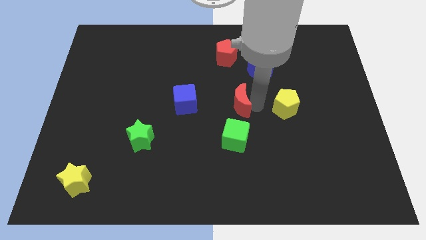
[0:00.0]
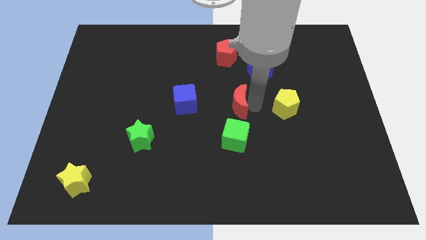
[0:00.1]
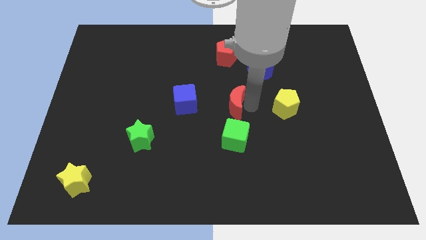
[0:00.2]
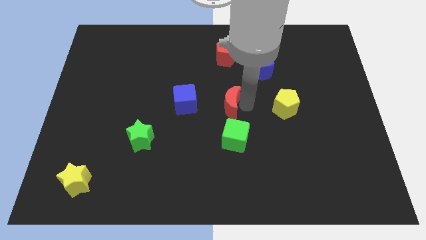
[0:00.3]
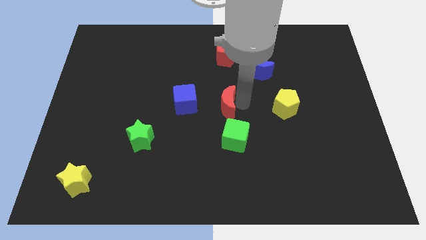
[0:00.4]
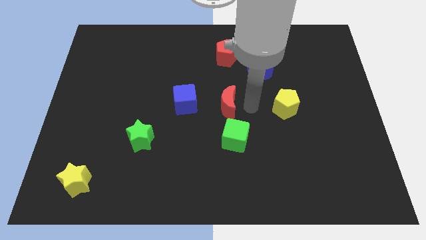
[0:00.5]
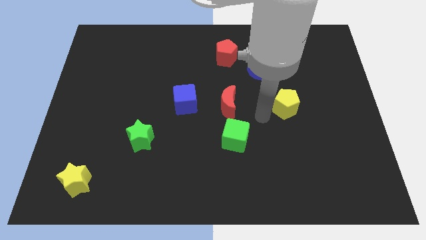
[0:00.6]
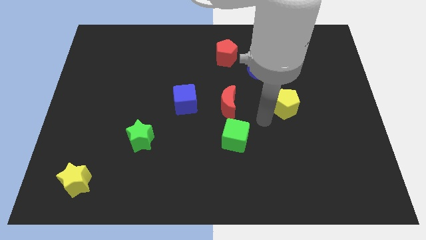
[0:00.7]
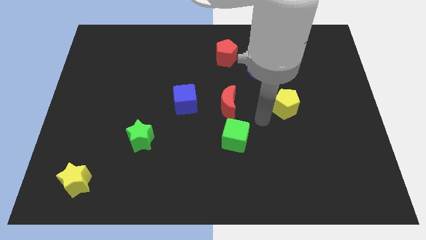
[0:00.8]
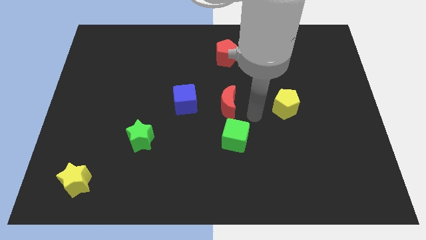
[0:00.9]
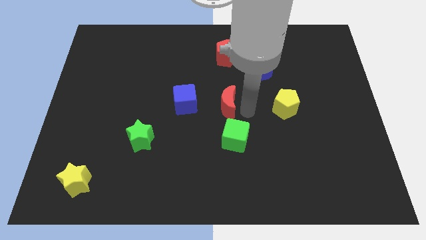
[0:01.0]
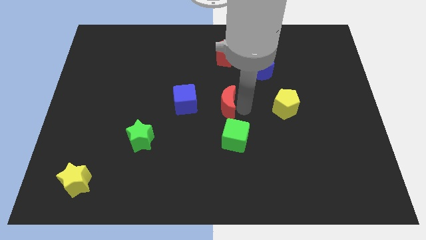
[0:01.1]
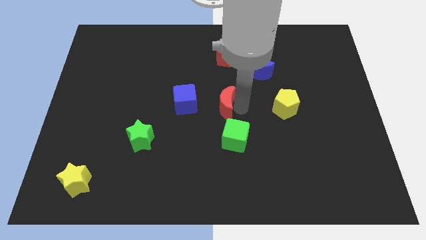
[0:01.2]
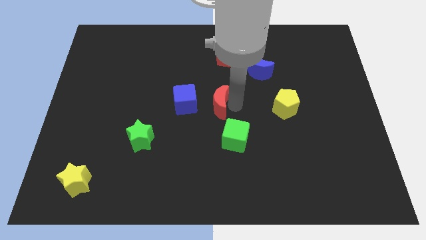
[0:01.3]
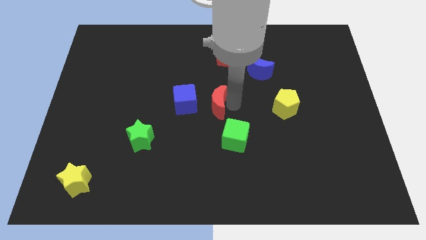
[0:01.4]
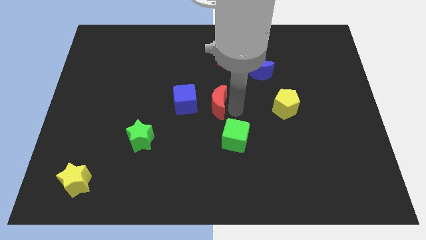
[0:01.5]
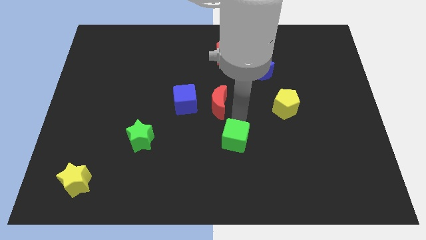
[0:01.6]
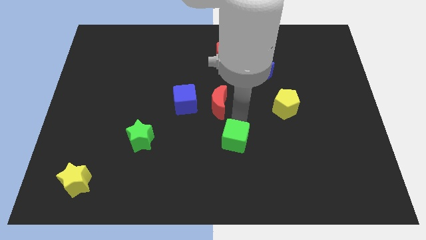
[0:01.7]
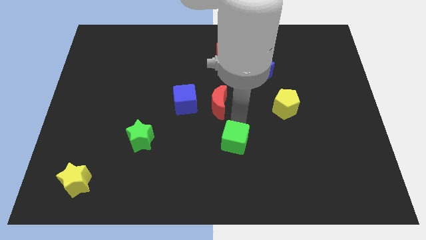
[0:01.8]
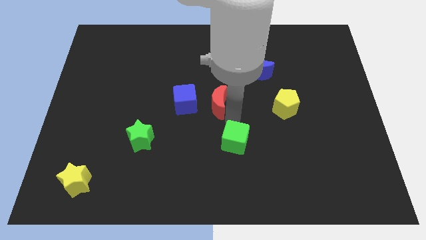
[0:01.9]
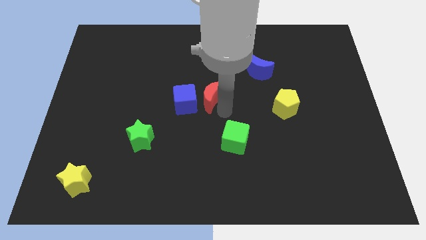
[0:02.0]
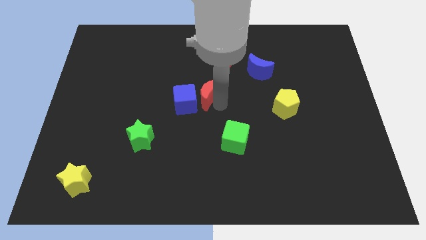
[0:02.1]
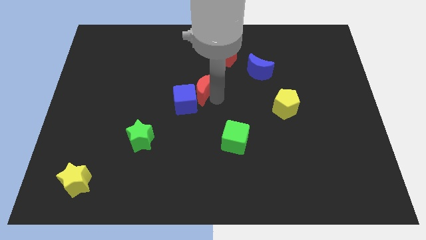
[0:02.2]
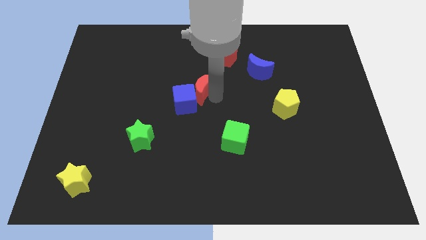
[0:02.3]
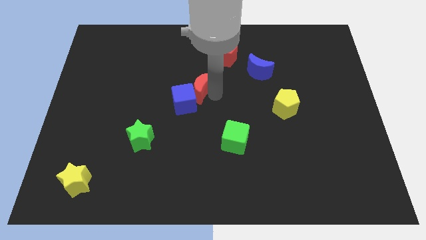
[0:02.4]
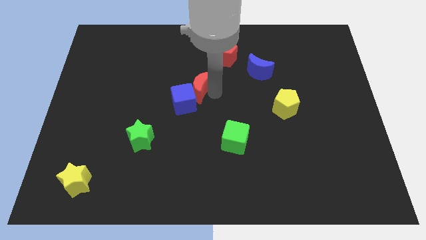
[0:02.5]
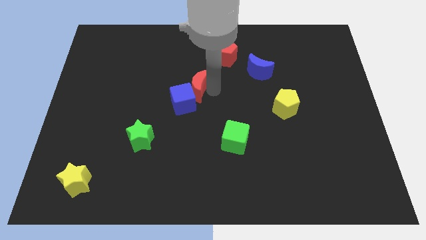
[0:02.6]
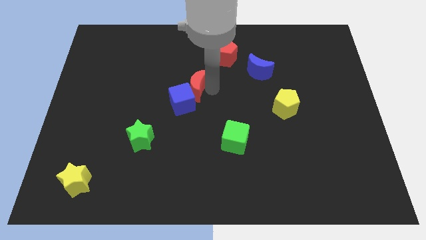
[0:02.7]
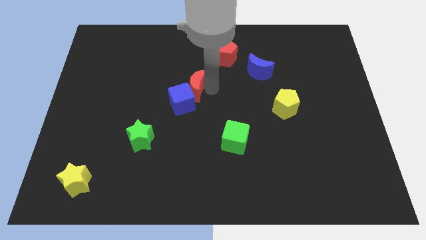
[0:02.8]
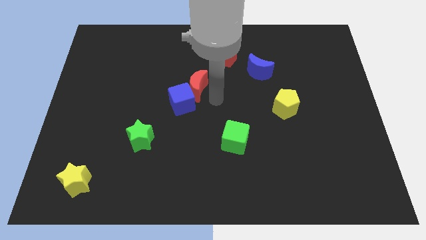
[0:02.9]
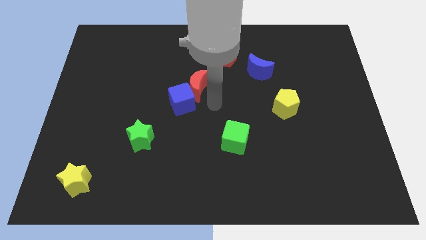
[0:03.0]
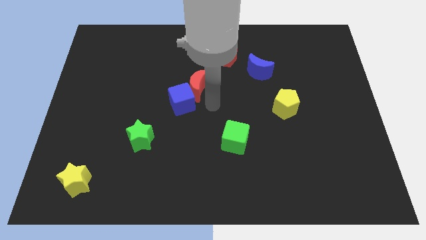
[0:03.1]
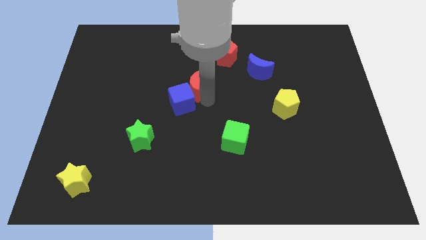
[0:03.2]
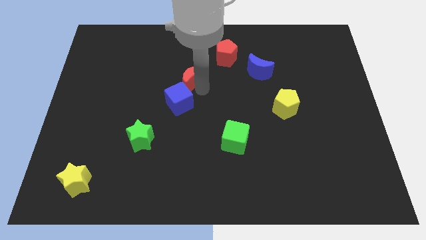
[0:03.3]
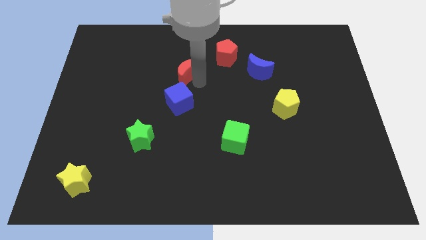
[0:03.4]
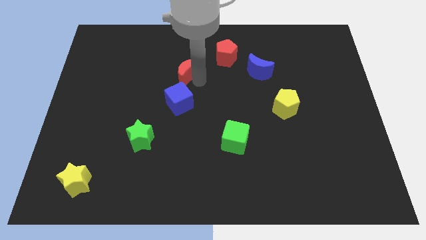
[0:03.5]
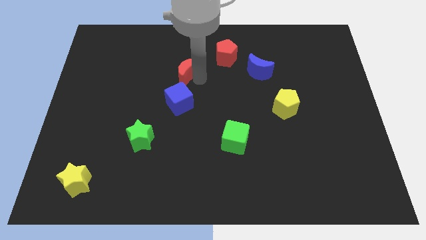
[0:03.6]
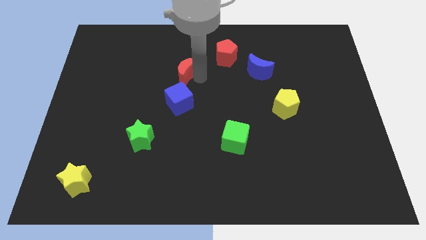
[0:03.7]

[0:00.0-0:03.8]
move the red crescent to the top of the blue cube

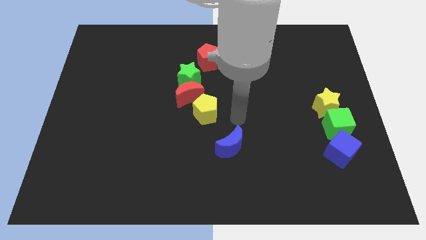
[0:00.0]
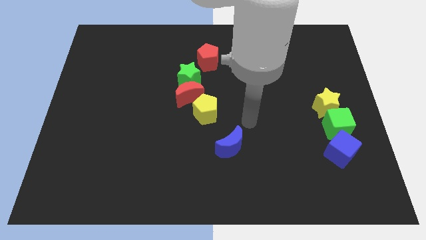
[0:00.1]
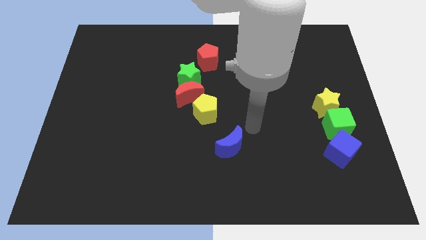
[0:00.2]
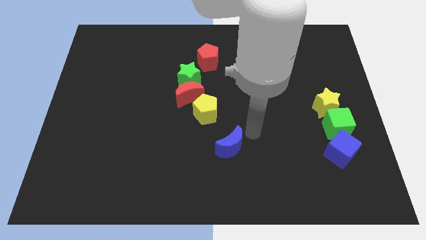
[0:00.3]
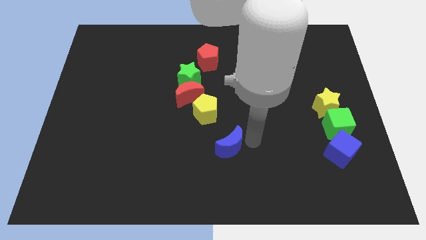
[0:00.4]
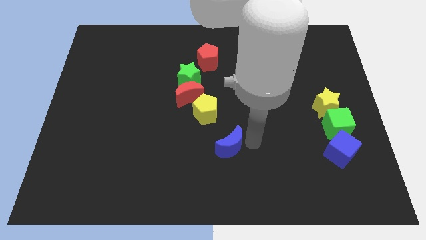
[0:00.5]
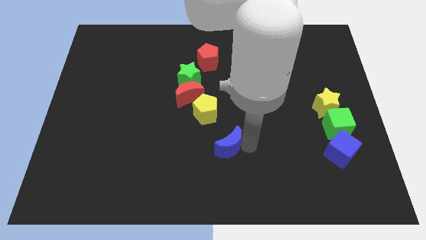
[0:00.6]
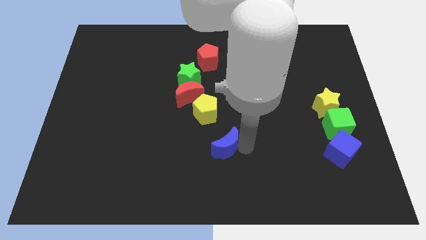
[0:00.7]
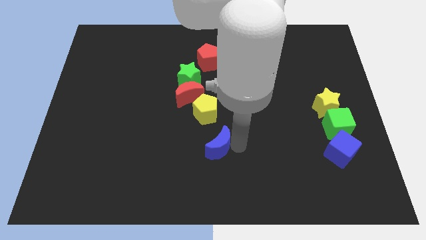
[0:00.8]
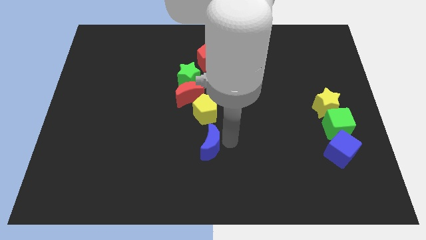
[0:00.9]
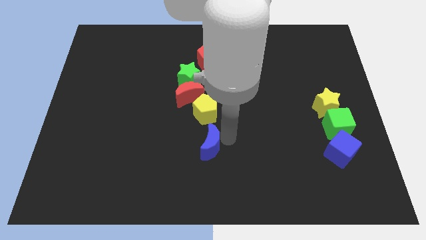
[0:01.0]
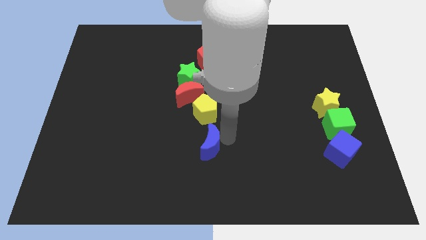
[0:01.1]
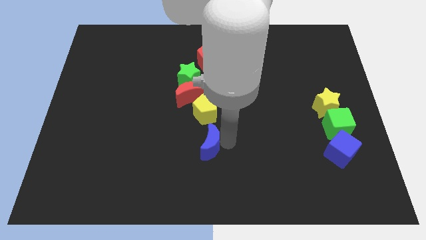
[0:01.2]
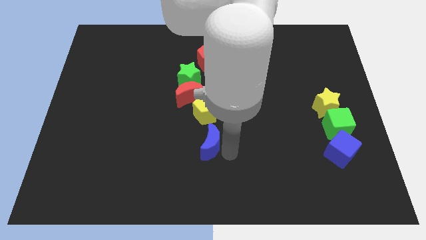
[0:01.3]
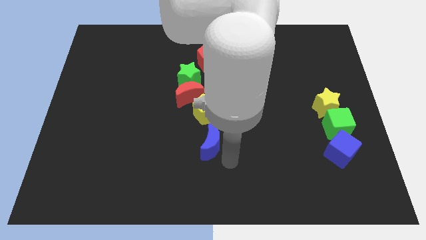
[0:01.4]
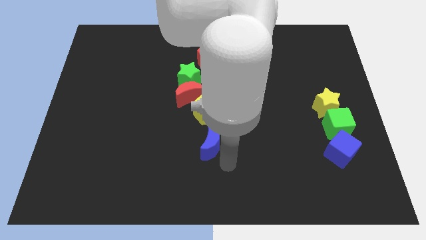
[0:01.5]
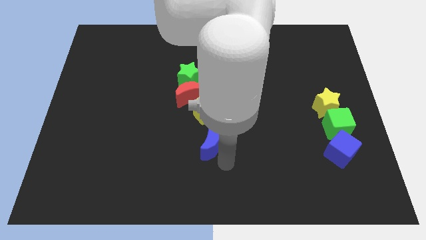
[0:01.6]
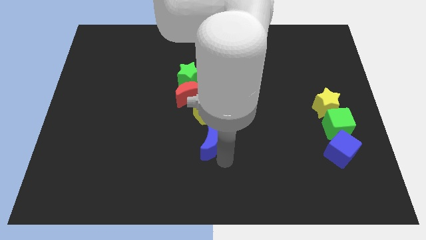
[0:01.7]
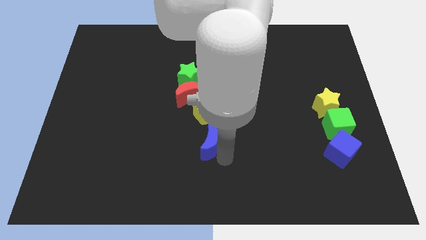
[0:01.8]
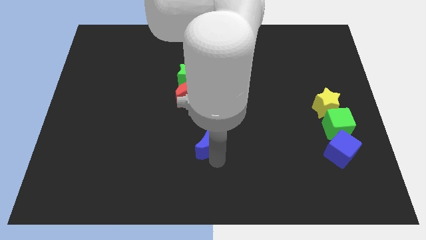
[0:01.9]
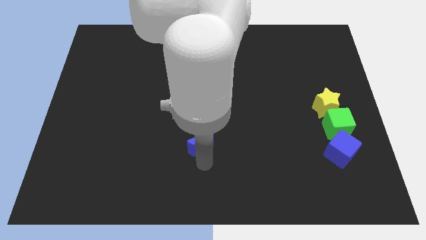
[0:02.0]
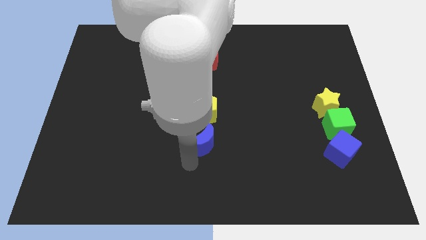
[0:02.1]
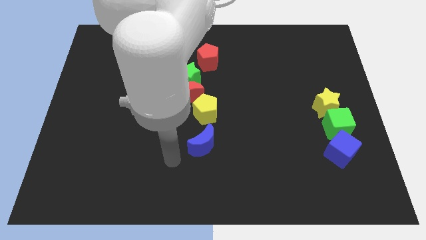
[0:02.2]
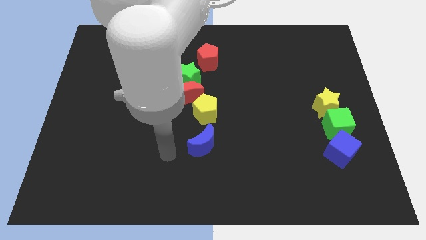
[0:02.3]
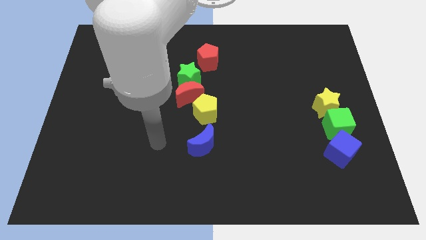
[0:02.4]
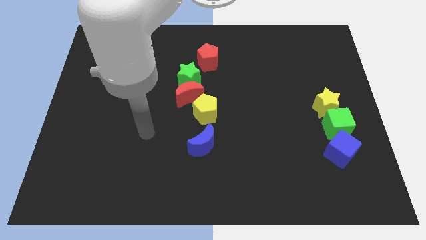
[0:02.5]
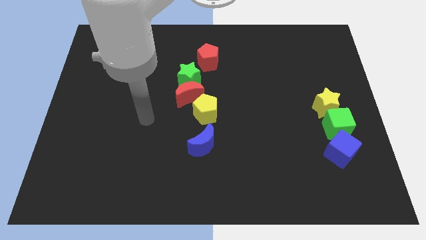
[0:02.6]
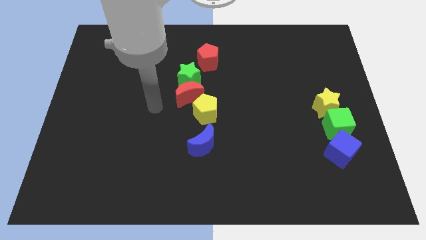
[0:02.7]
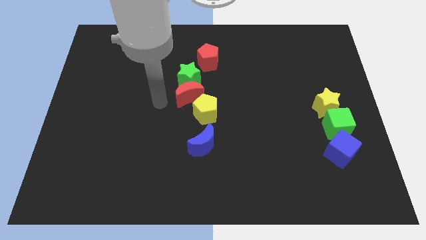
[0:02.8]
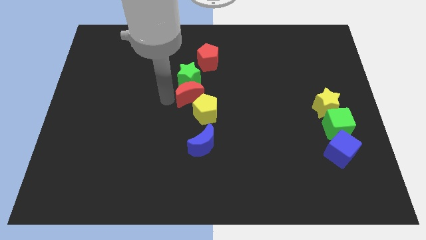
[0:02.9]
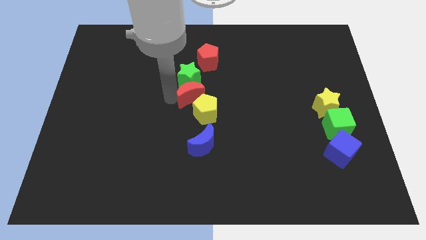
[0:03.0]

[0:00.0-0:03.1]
move the blue semicircle below the yellow pentagon

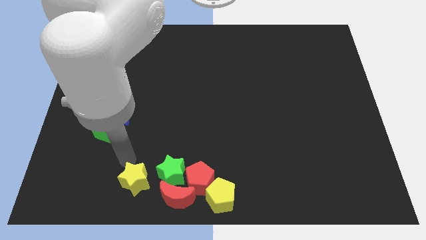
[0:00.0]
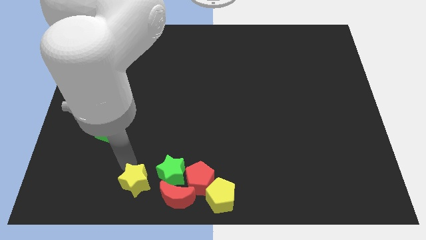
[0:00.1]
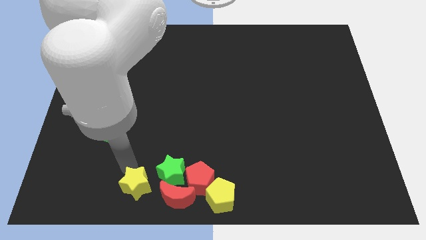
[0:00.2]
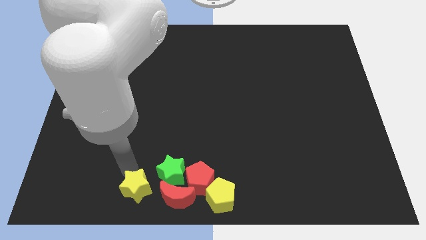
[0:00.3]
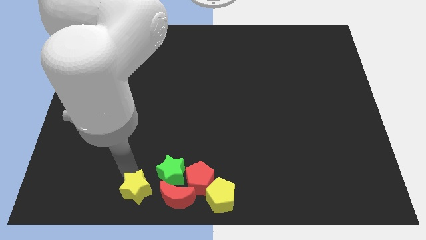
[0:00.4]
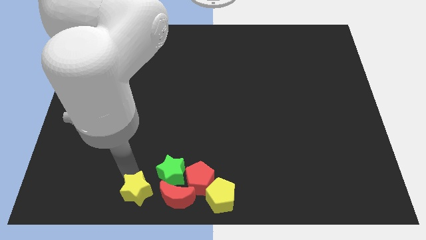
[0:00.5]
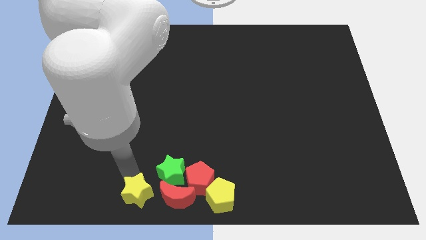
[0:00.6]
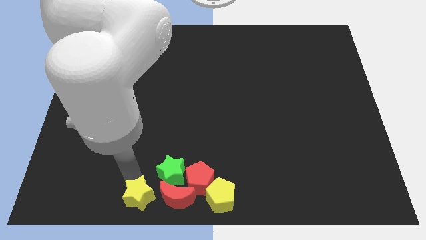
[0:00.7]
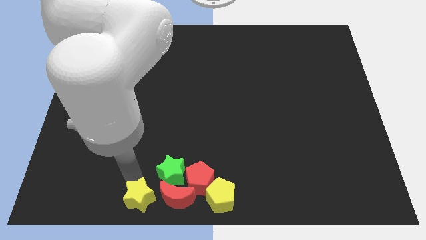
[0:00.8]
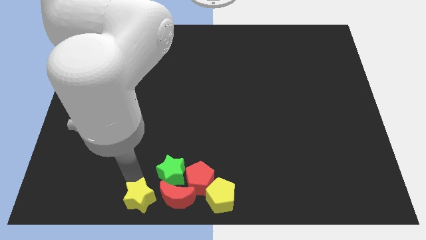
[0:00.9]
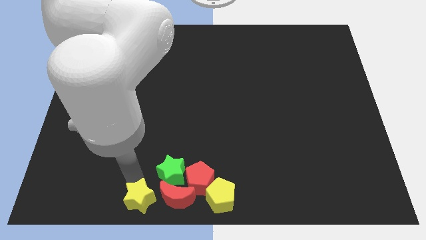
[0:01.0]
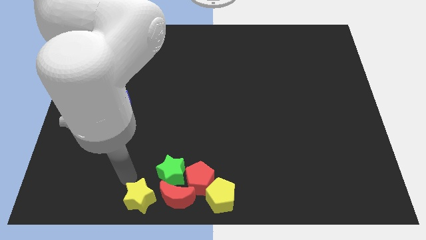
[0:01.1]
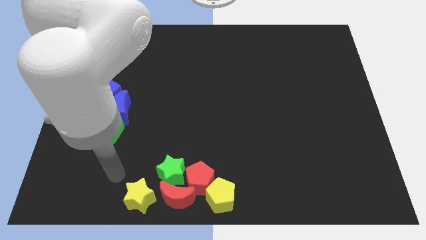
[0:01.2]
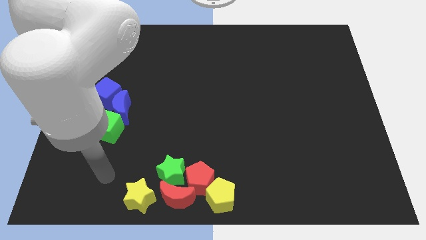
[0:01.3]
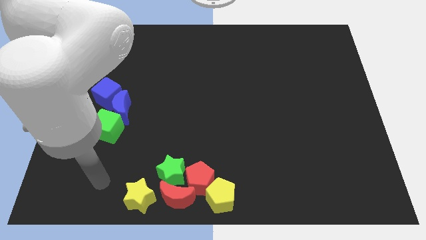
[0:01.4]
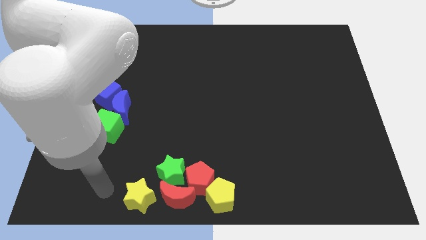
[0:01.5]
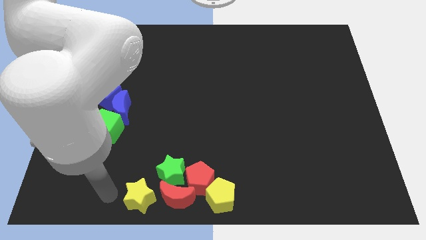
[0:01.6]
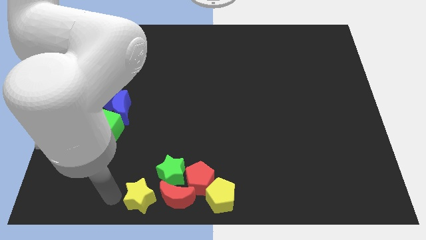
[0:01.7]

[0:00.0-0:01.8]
place the yellow star to the left of the red crescent

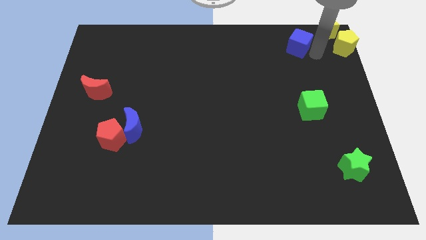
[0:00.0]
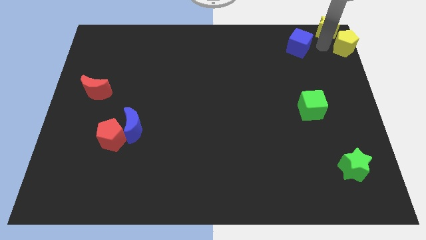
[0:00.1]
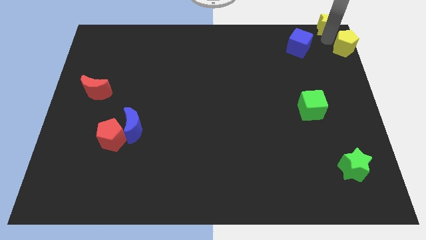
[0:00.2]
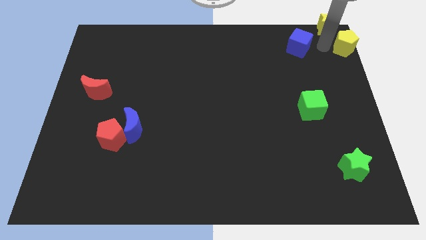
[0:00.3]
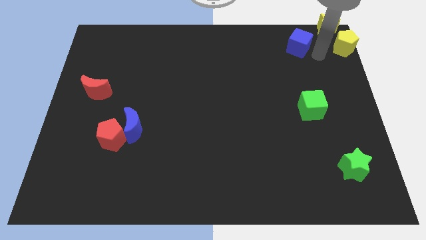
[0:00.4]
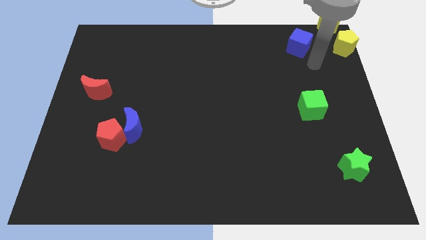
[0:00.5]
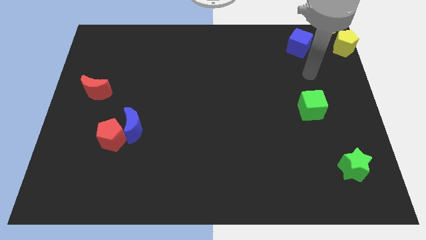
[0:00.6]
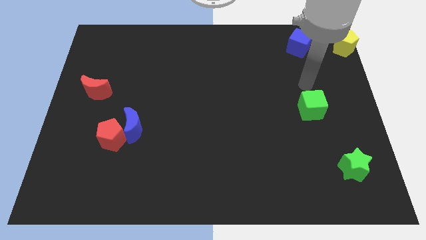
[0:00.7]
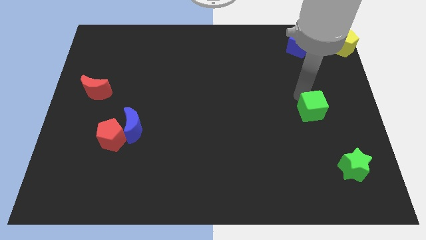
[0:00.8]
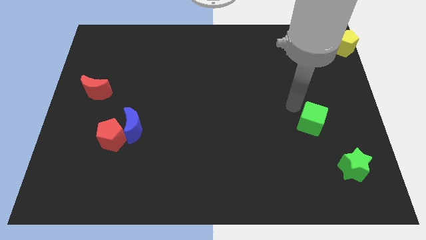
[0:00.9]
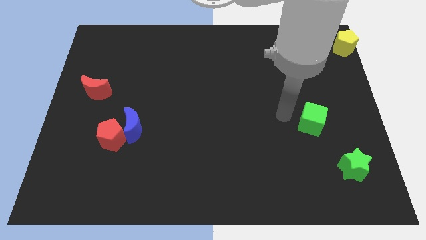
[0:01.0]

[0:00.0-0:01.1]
move blue cube left below the yellow star
